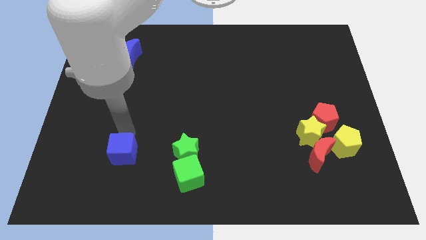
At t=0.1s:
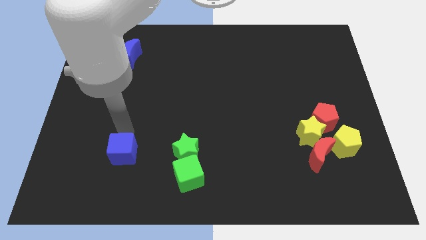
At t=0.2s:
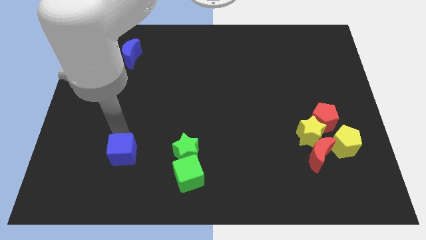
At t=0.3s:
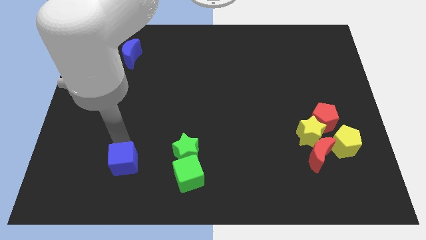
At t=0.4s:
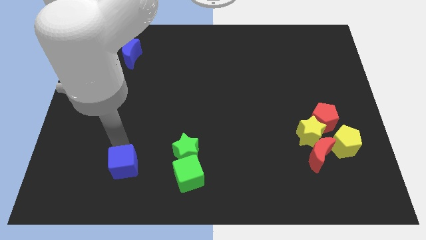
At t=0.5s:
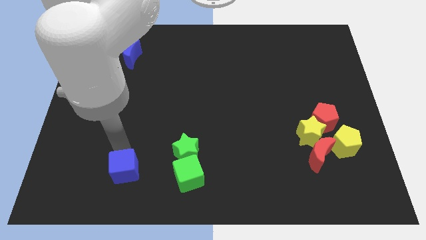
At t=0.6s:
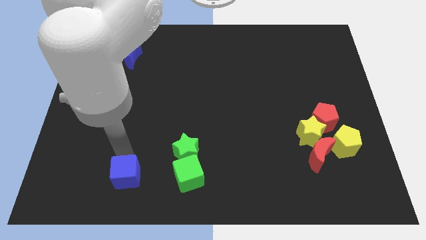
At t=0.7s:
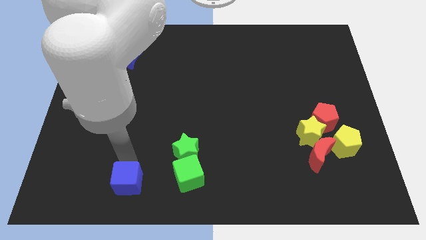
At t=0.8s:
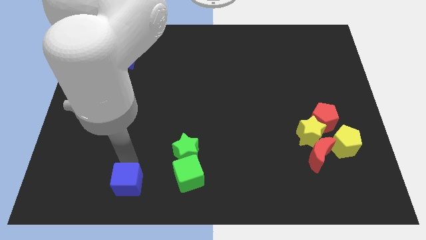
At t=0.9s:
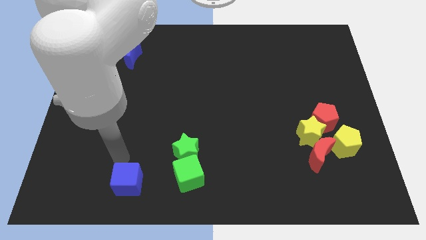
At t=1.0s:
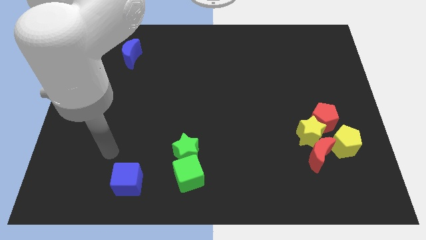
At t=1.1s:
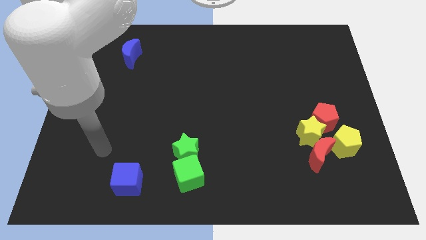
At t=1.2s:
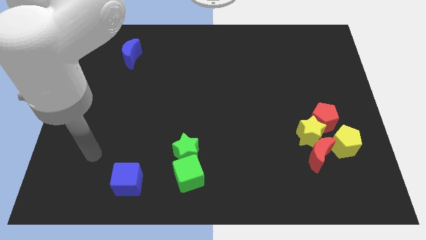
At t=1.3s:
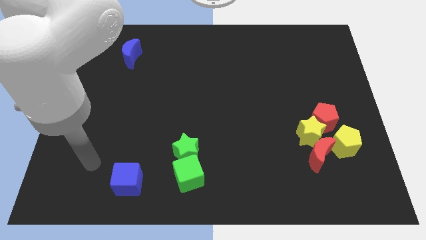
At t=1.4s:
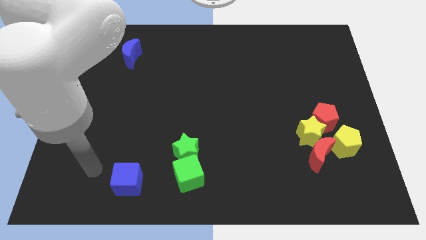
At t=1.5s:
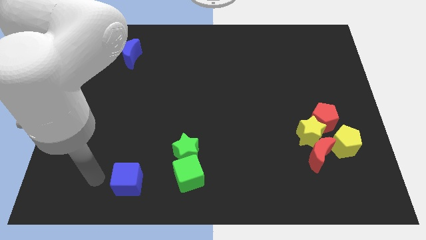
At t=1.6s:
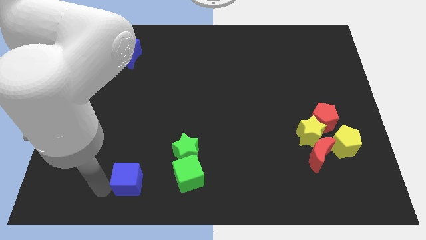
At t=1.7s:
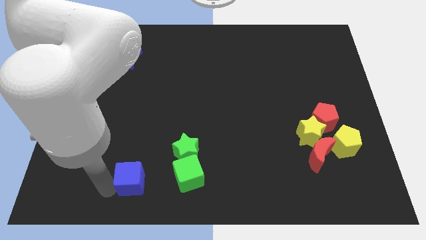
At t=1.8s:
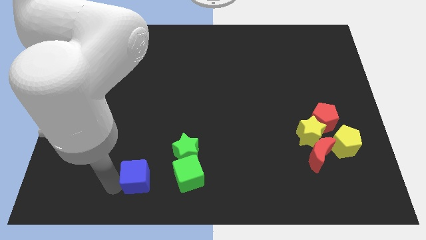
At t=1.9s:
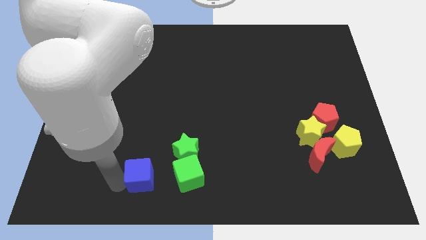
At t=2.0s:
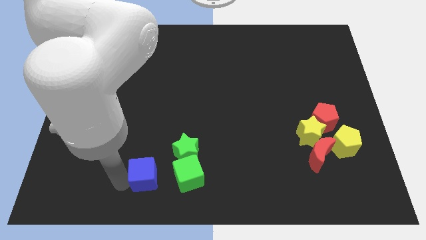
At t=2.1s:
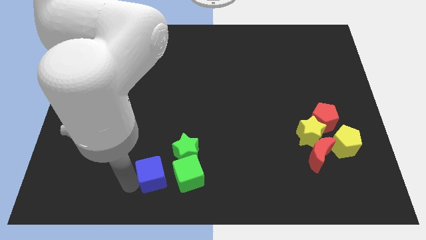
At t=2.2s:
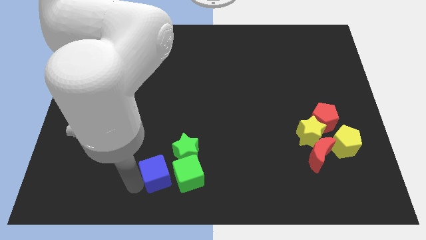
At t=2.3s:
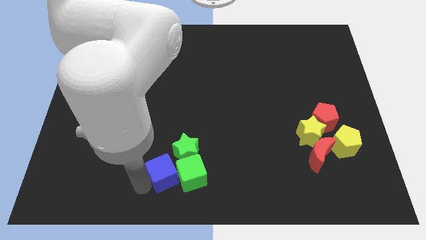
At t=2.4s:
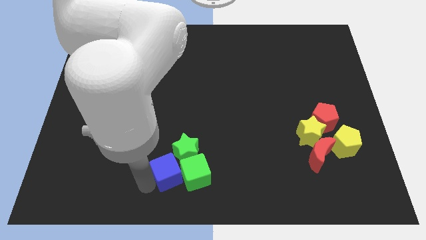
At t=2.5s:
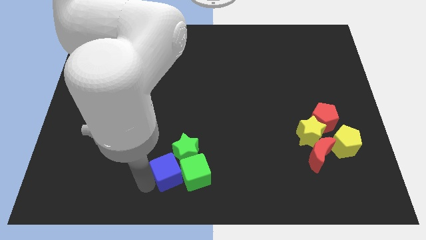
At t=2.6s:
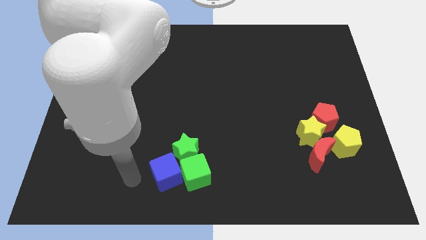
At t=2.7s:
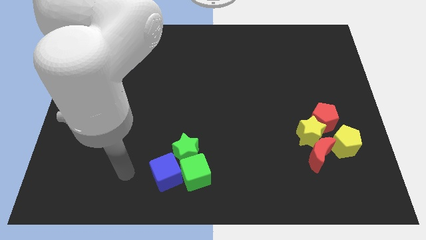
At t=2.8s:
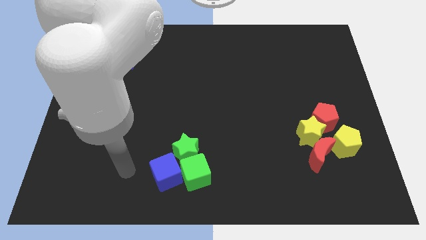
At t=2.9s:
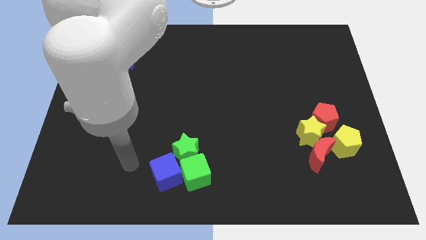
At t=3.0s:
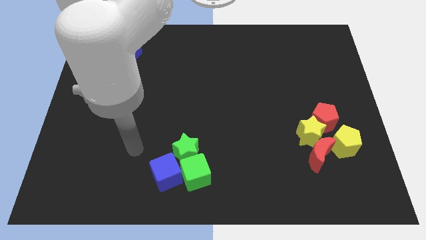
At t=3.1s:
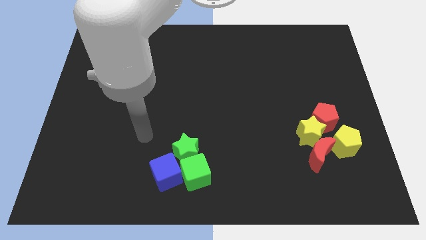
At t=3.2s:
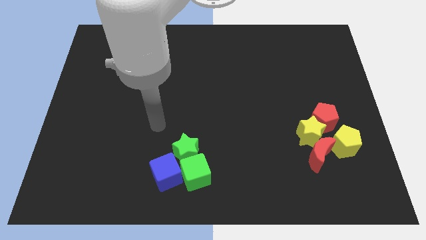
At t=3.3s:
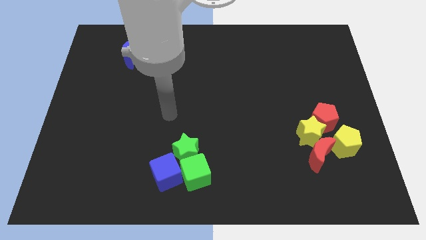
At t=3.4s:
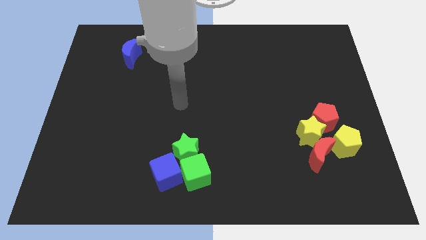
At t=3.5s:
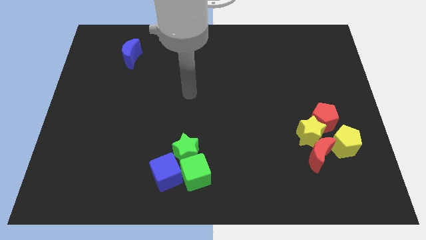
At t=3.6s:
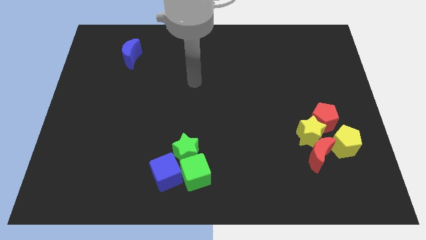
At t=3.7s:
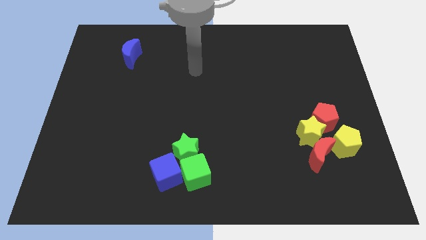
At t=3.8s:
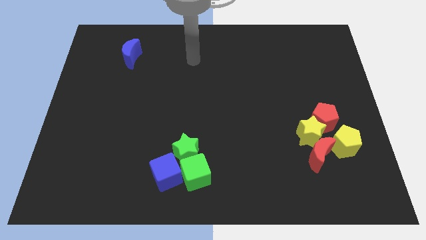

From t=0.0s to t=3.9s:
move the blue cube into green blocks

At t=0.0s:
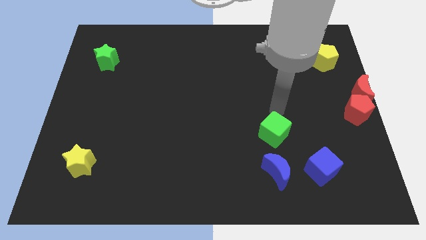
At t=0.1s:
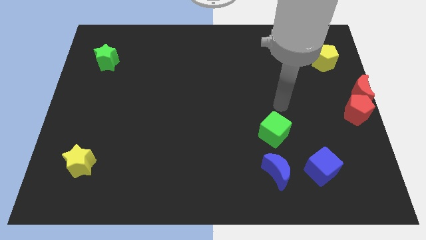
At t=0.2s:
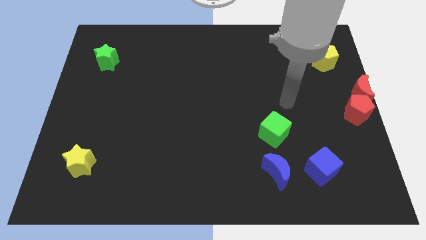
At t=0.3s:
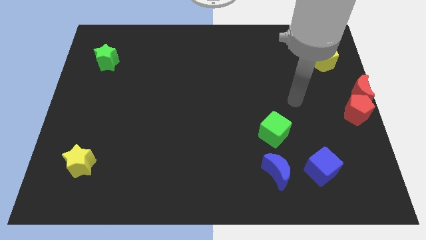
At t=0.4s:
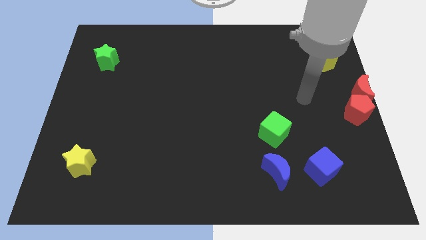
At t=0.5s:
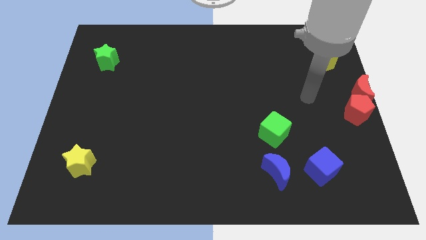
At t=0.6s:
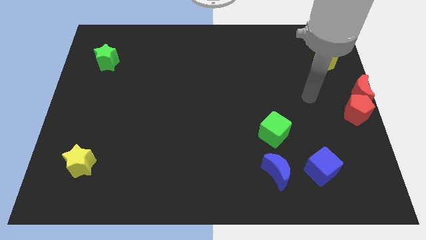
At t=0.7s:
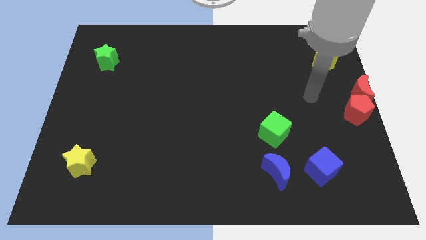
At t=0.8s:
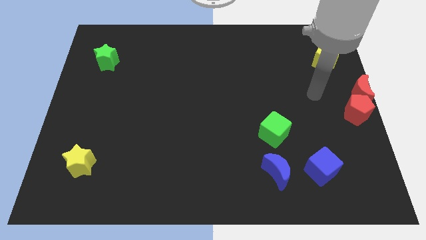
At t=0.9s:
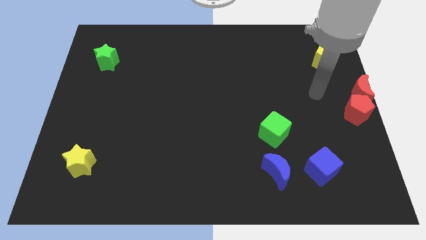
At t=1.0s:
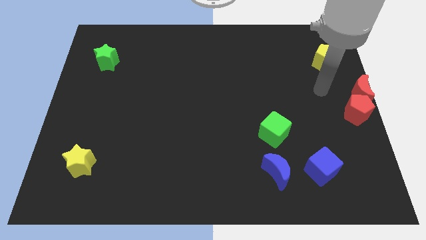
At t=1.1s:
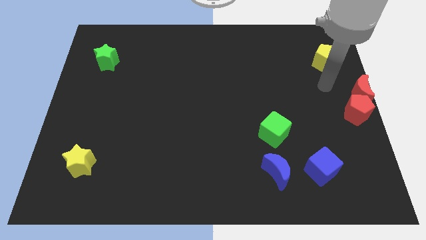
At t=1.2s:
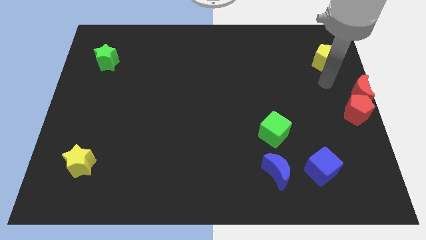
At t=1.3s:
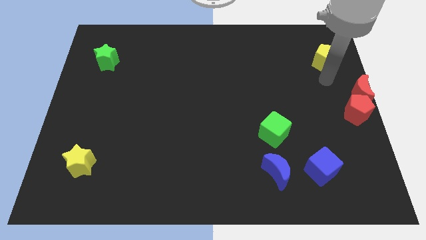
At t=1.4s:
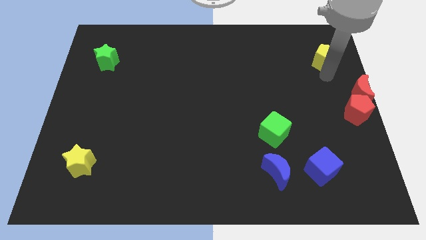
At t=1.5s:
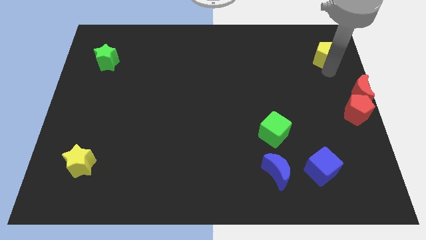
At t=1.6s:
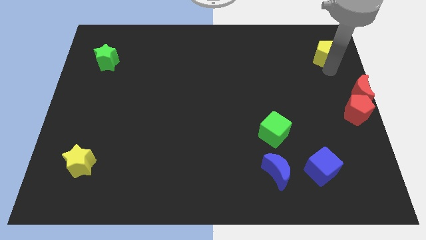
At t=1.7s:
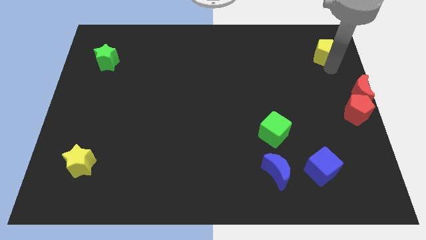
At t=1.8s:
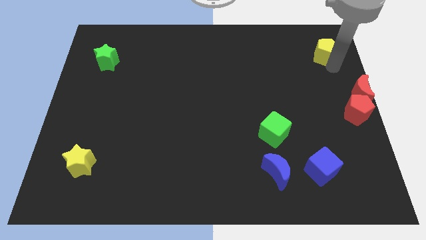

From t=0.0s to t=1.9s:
move the yellow pentagon slightly up

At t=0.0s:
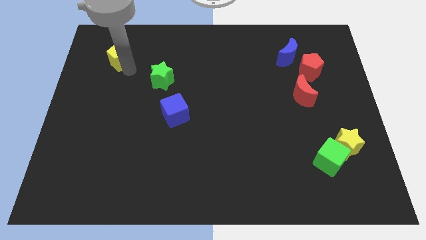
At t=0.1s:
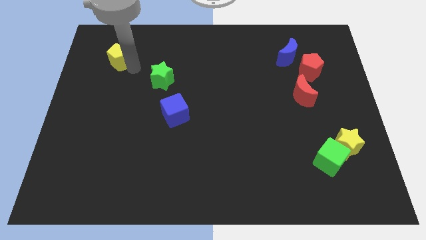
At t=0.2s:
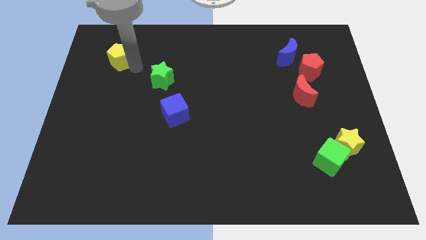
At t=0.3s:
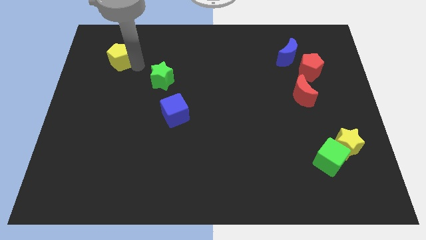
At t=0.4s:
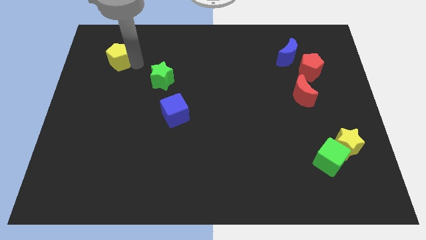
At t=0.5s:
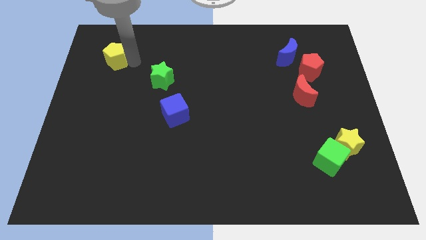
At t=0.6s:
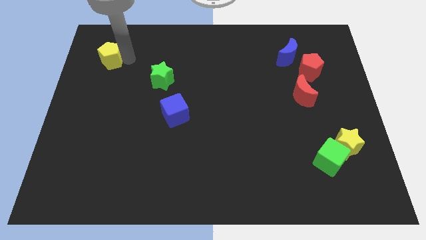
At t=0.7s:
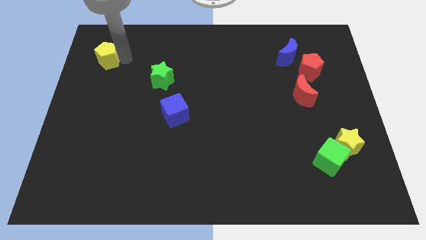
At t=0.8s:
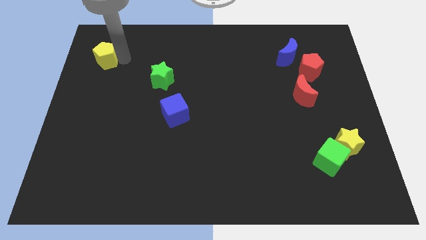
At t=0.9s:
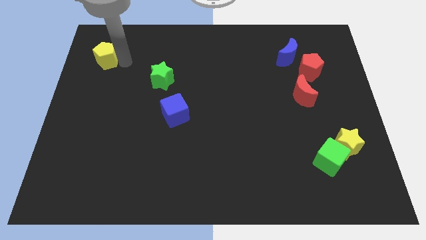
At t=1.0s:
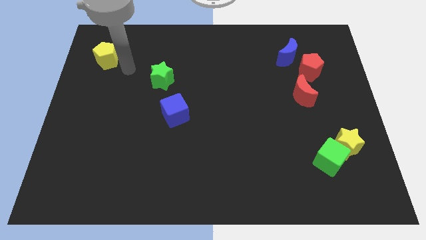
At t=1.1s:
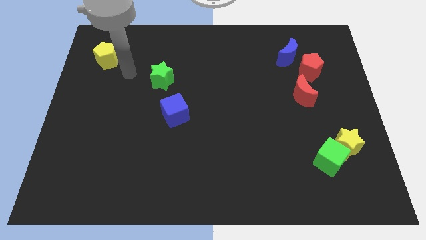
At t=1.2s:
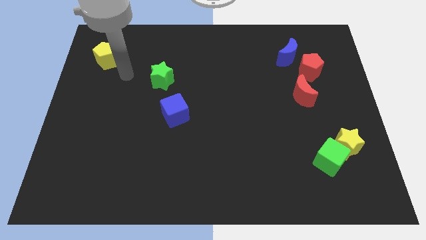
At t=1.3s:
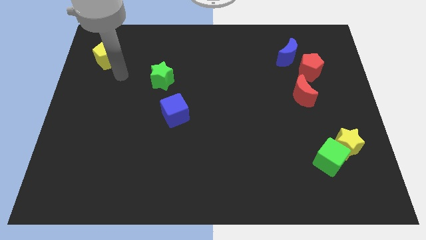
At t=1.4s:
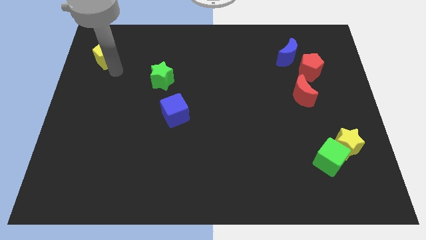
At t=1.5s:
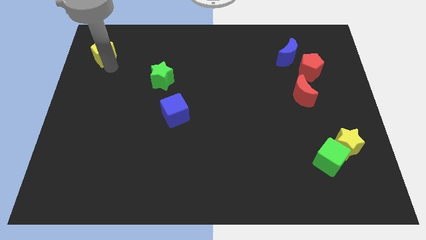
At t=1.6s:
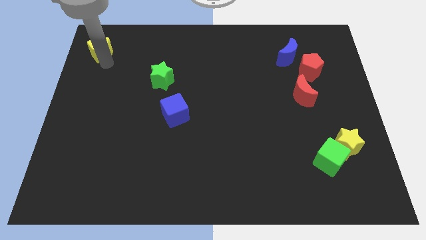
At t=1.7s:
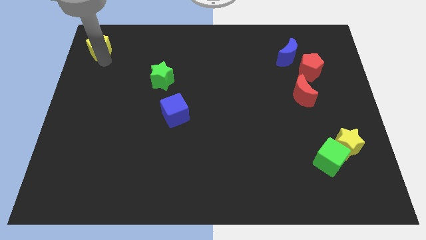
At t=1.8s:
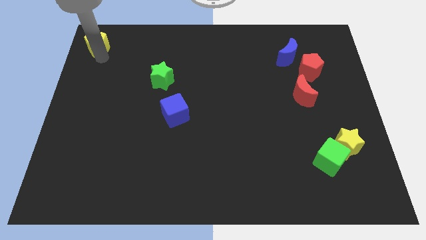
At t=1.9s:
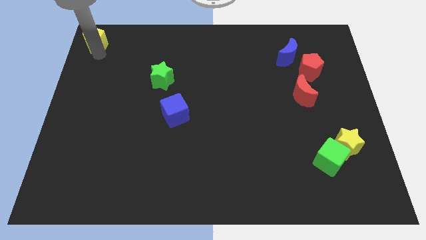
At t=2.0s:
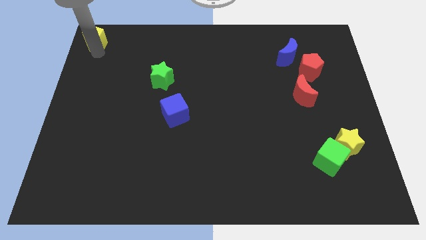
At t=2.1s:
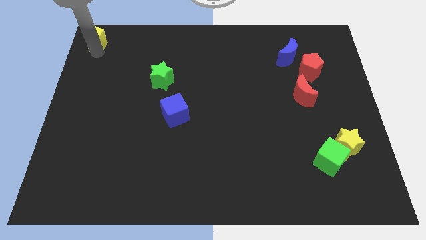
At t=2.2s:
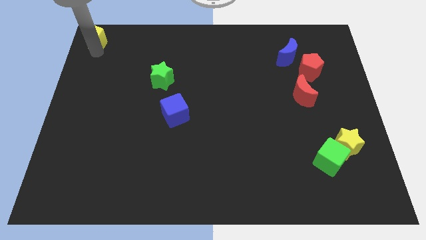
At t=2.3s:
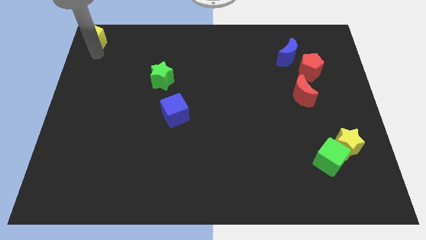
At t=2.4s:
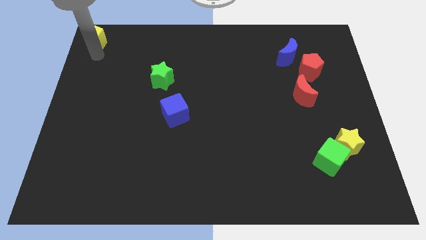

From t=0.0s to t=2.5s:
place yellow pentagon to the top left corner of the board

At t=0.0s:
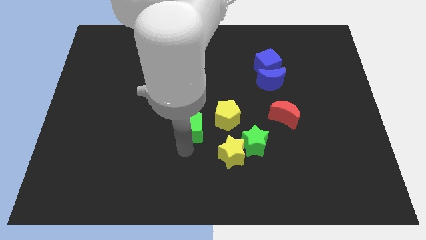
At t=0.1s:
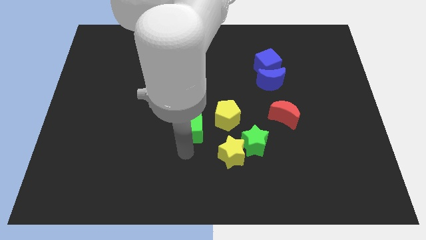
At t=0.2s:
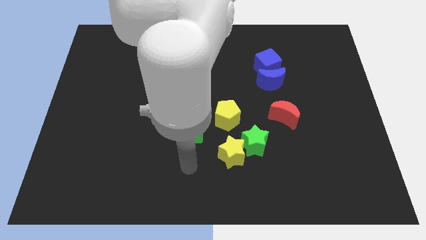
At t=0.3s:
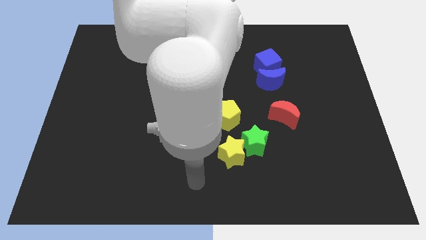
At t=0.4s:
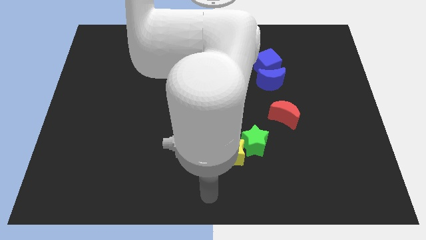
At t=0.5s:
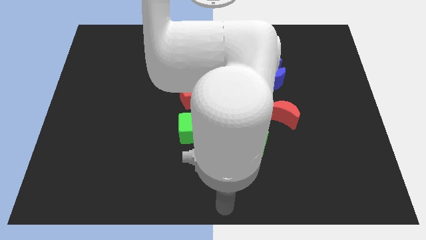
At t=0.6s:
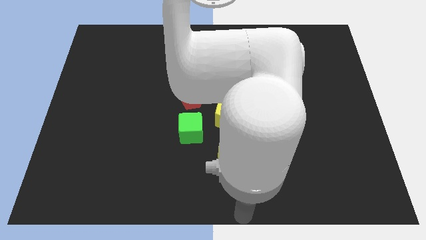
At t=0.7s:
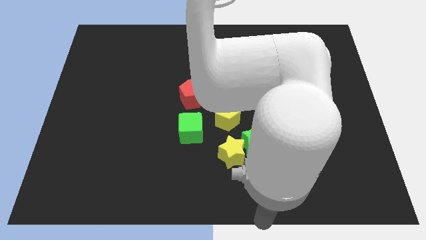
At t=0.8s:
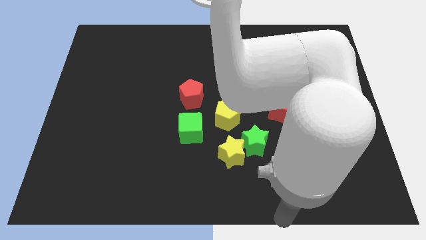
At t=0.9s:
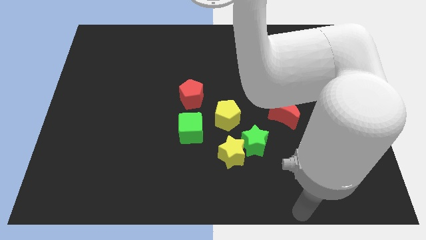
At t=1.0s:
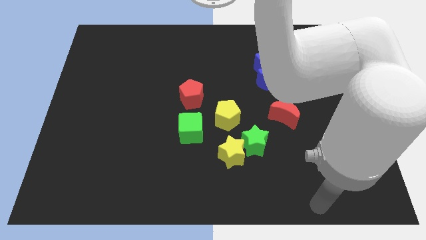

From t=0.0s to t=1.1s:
move arm away from green cube
